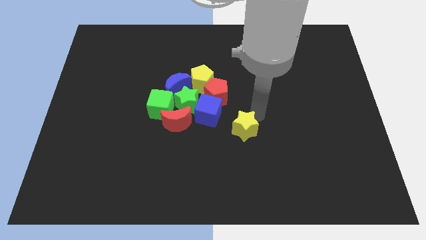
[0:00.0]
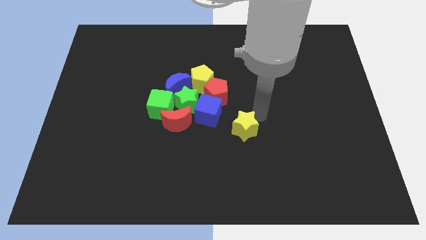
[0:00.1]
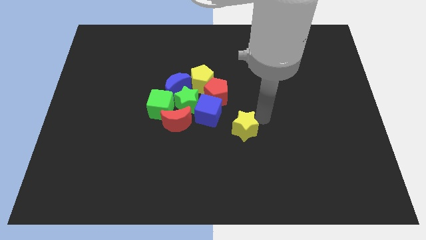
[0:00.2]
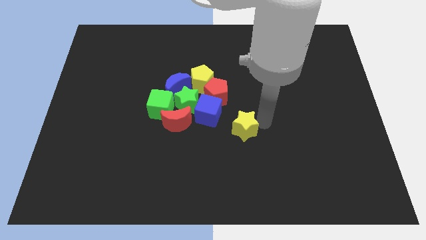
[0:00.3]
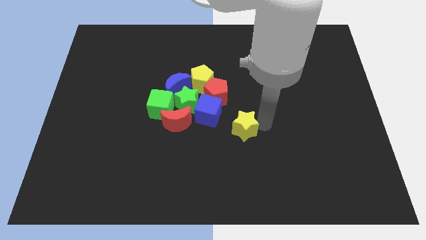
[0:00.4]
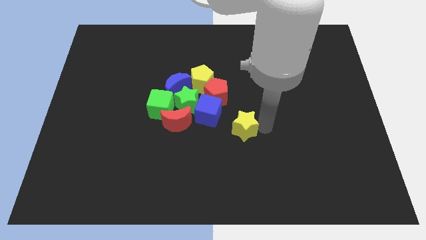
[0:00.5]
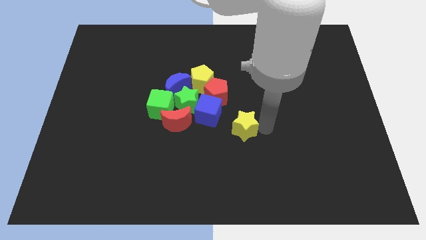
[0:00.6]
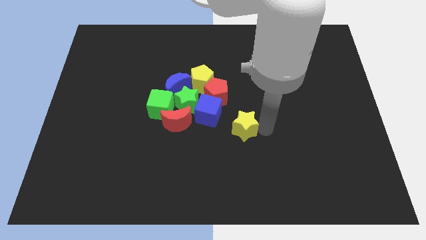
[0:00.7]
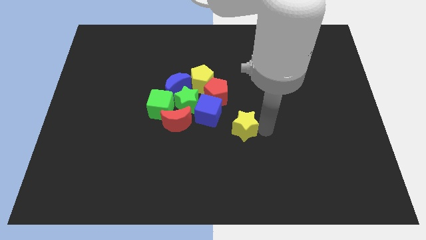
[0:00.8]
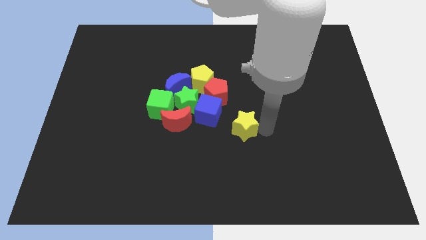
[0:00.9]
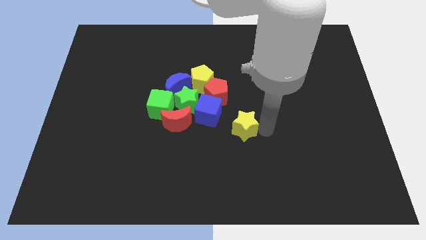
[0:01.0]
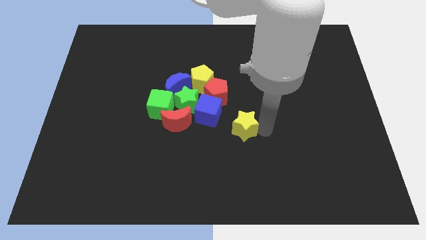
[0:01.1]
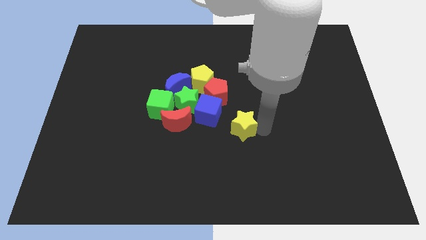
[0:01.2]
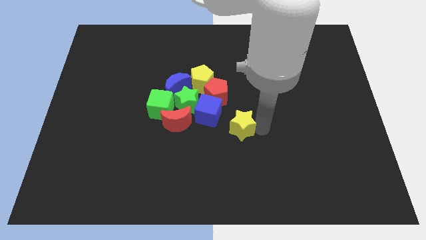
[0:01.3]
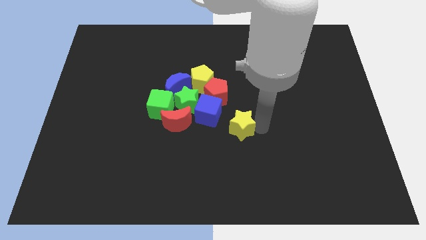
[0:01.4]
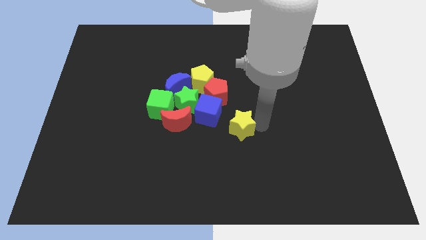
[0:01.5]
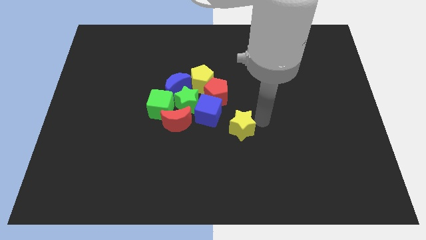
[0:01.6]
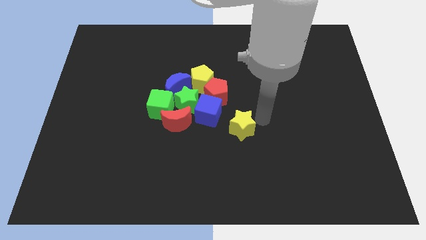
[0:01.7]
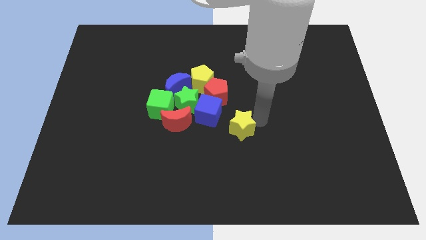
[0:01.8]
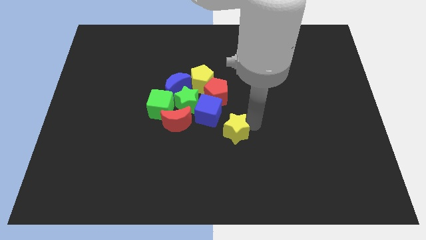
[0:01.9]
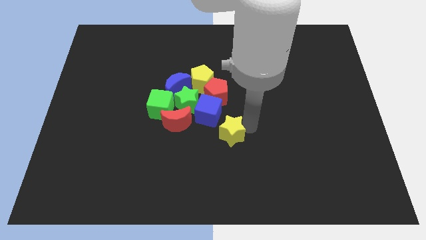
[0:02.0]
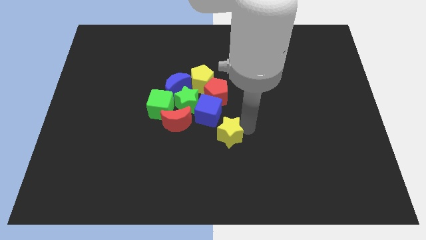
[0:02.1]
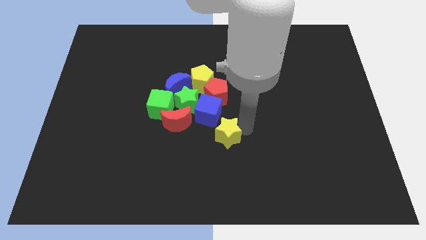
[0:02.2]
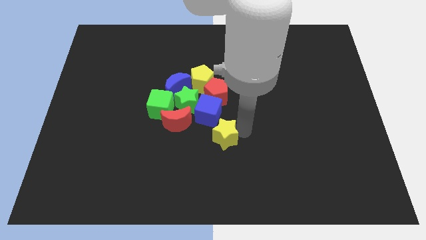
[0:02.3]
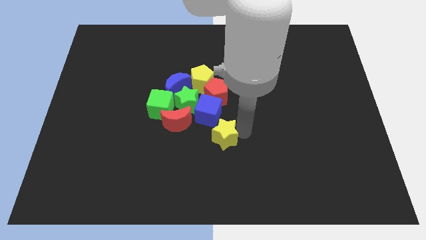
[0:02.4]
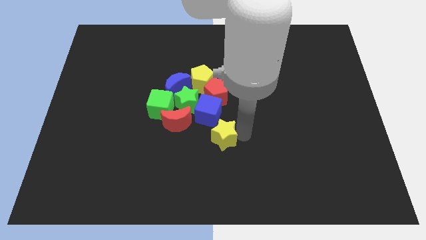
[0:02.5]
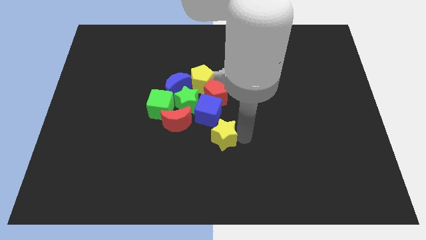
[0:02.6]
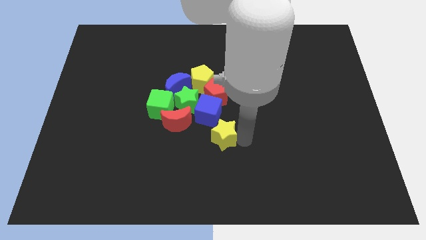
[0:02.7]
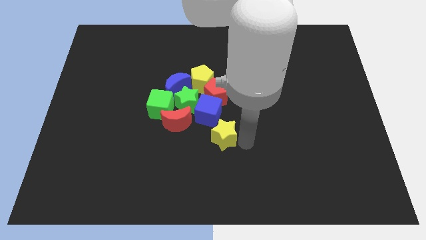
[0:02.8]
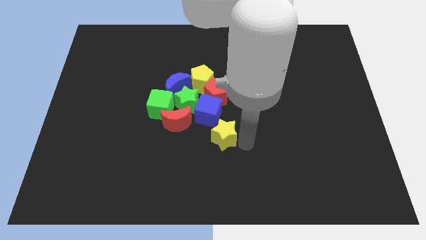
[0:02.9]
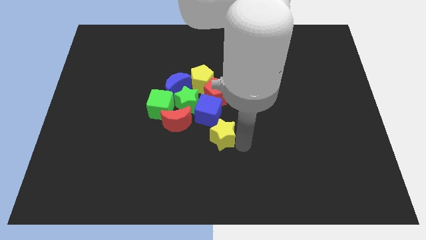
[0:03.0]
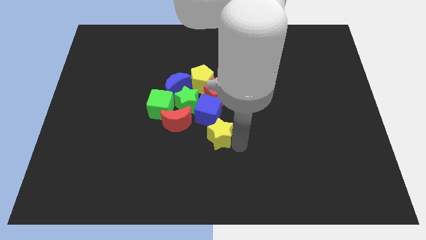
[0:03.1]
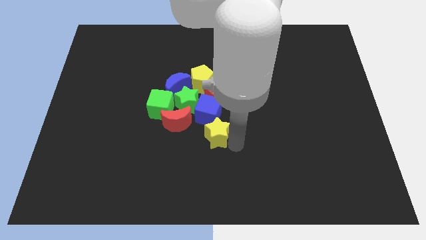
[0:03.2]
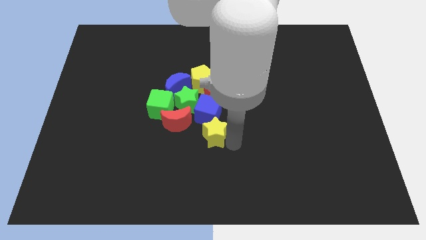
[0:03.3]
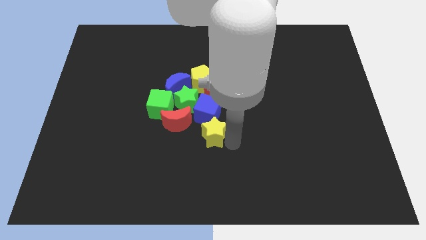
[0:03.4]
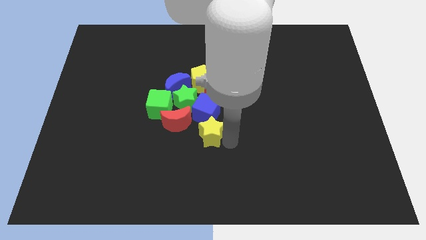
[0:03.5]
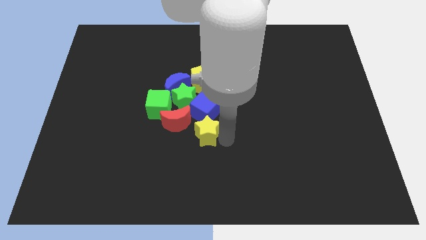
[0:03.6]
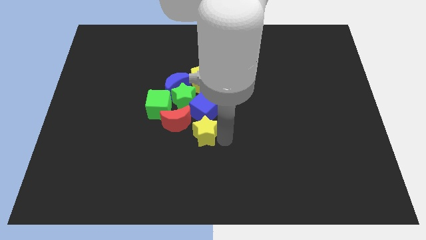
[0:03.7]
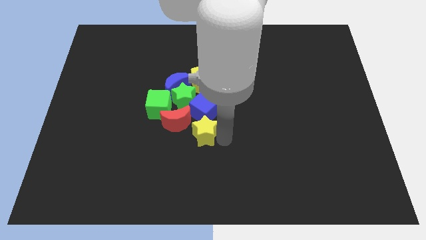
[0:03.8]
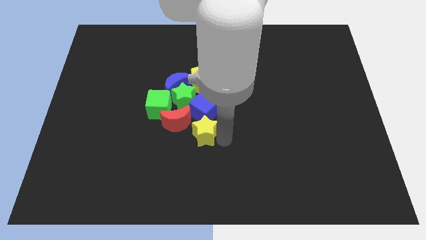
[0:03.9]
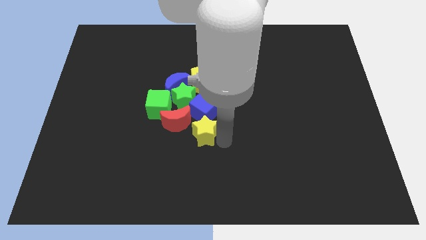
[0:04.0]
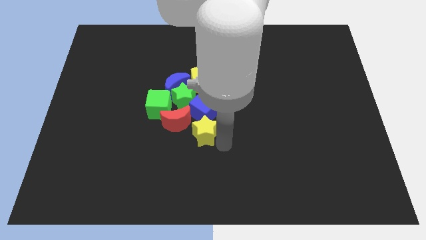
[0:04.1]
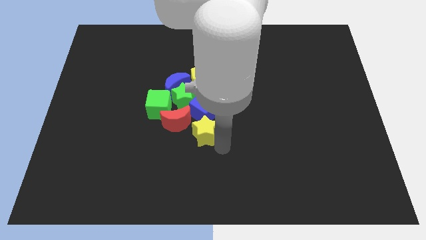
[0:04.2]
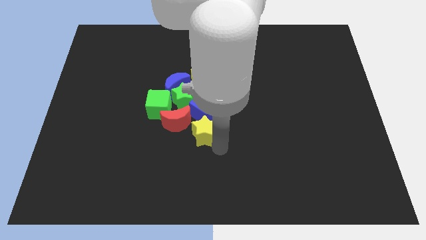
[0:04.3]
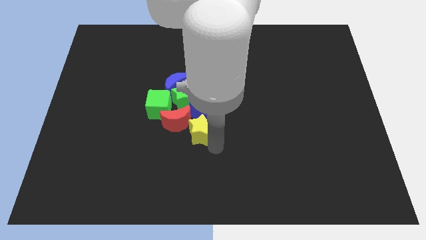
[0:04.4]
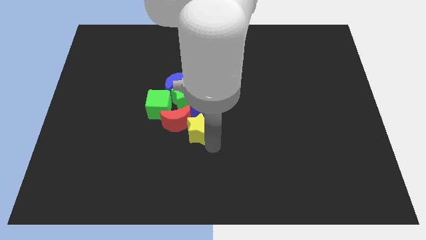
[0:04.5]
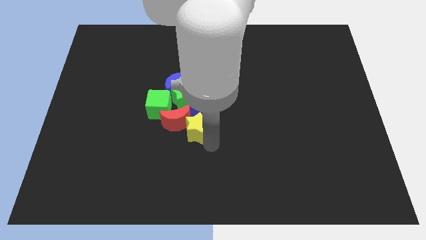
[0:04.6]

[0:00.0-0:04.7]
move the yellow star into the group of blocks

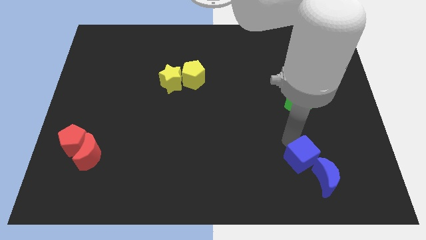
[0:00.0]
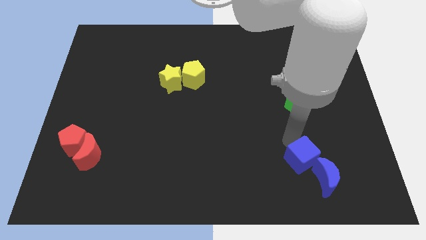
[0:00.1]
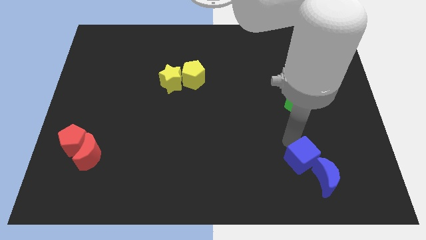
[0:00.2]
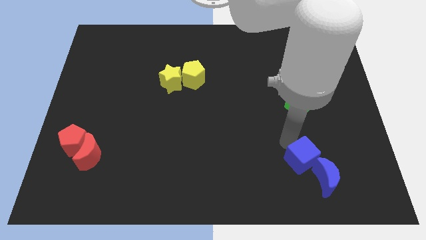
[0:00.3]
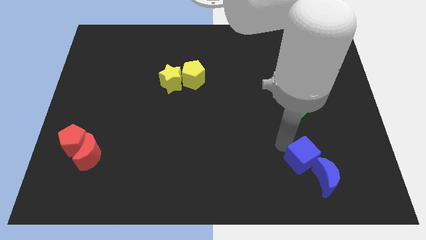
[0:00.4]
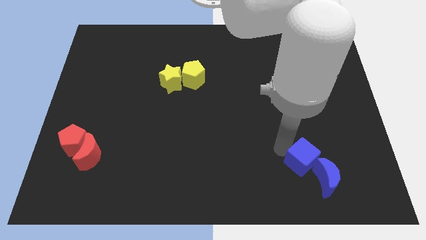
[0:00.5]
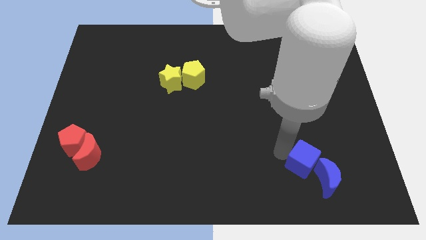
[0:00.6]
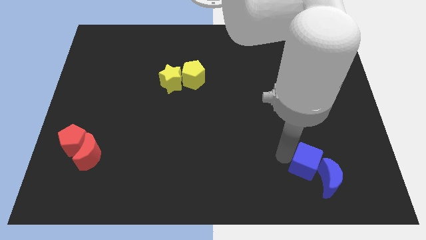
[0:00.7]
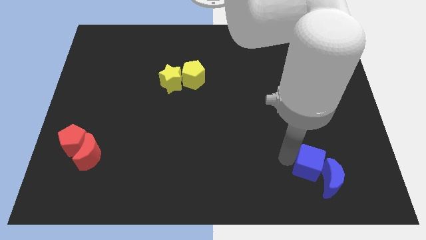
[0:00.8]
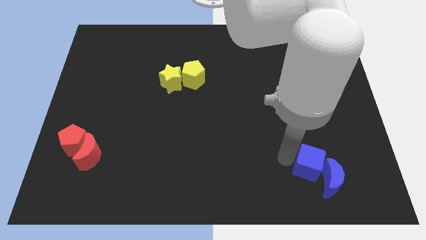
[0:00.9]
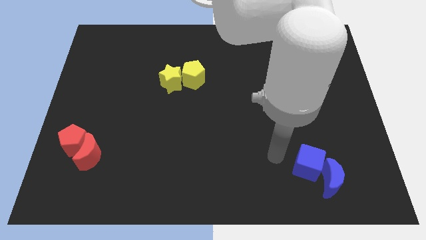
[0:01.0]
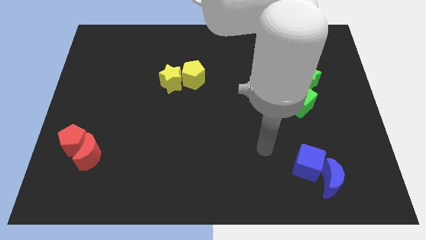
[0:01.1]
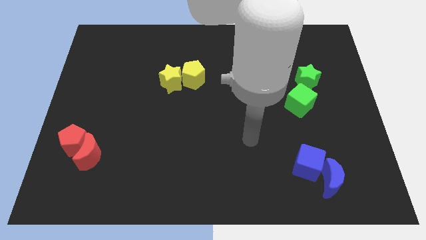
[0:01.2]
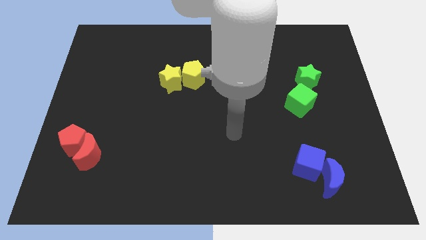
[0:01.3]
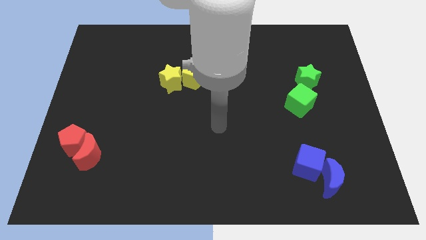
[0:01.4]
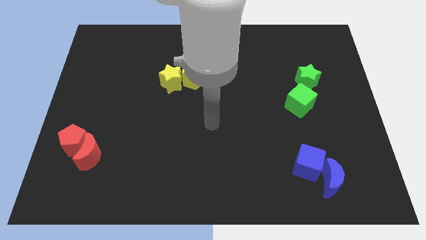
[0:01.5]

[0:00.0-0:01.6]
move your arm away from the blue cube

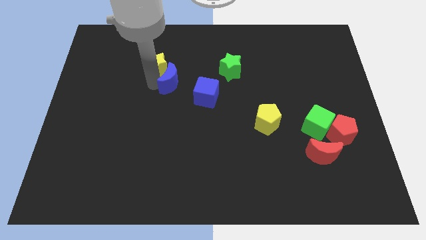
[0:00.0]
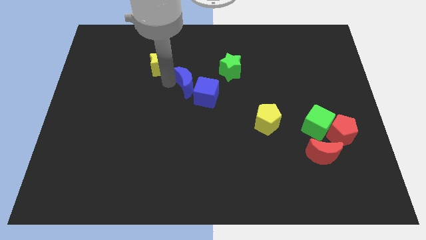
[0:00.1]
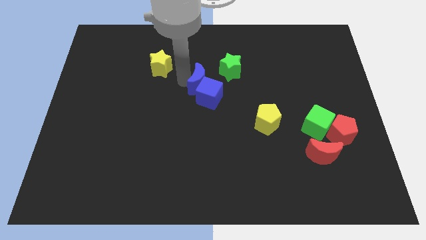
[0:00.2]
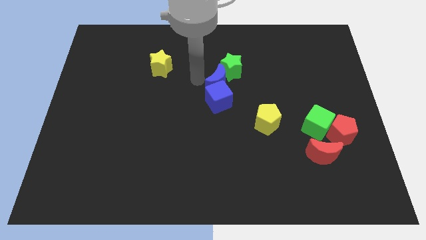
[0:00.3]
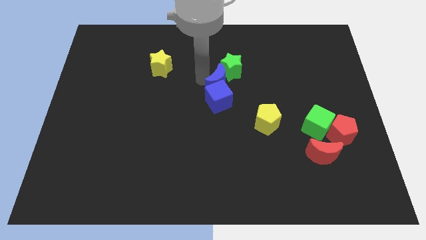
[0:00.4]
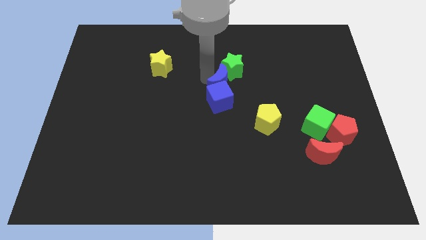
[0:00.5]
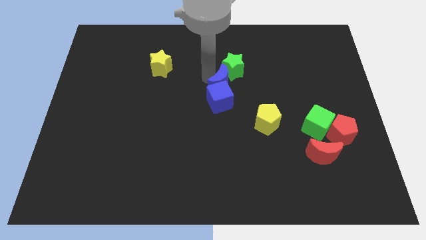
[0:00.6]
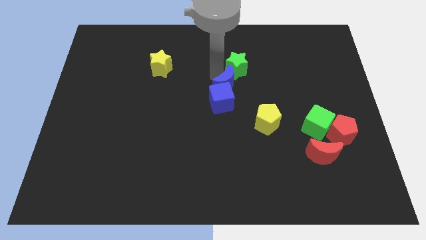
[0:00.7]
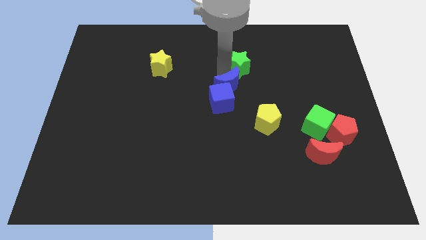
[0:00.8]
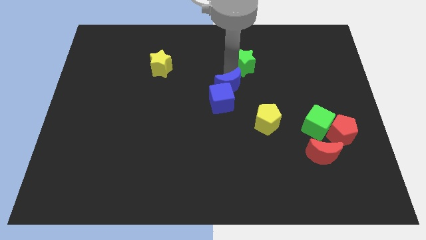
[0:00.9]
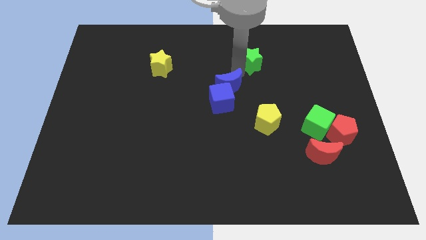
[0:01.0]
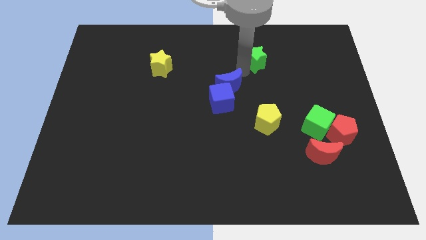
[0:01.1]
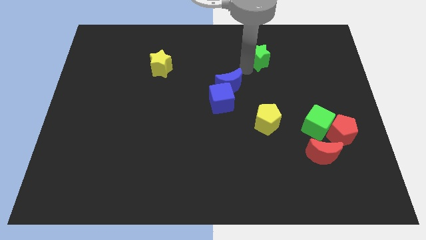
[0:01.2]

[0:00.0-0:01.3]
push the blue cube and green star with the blue moon

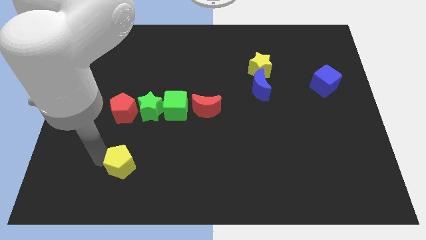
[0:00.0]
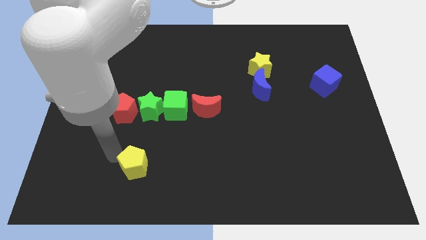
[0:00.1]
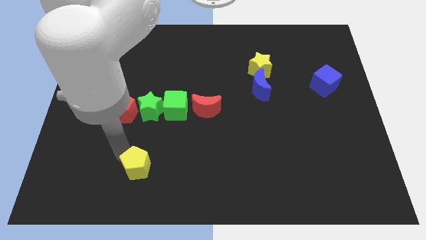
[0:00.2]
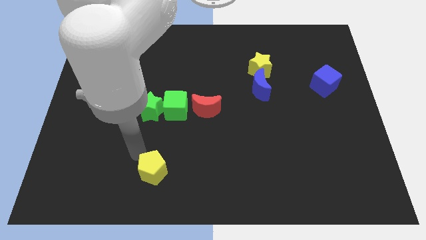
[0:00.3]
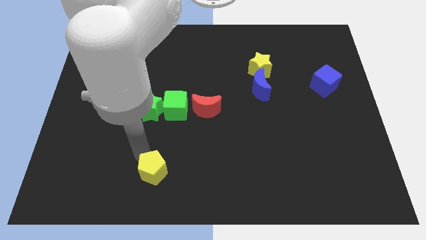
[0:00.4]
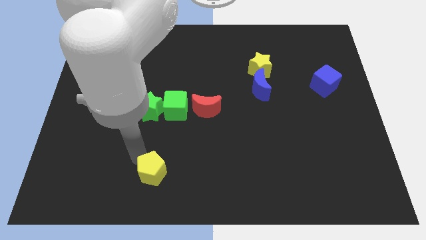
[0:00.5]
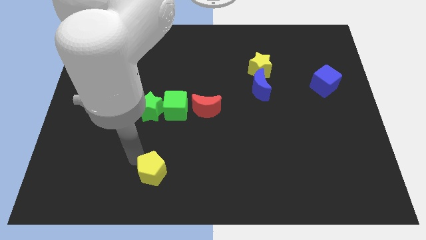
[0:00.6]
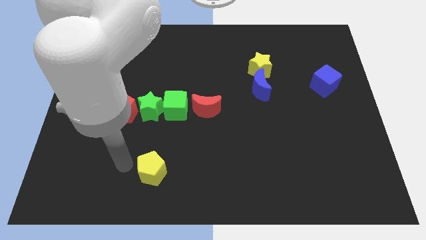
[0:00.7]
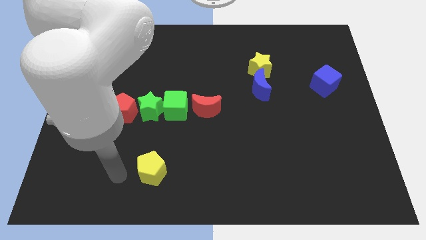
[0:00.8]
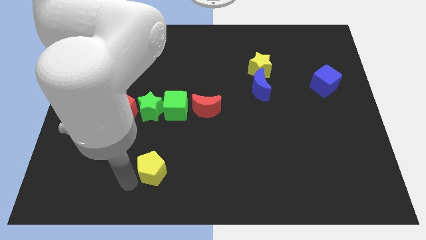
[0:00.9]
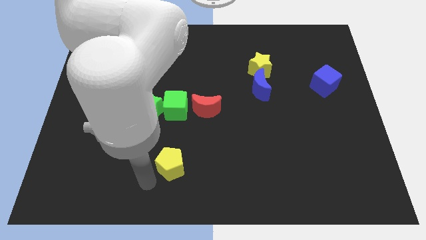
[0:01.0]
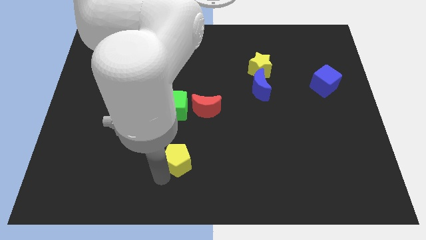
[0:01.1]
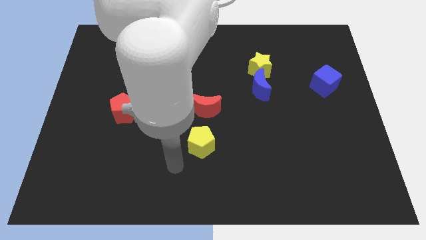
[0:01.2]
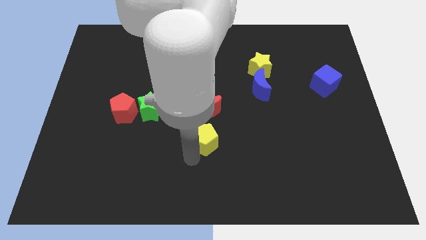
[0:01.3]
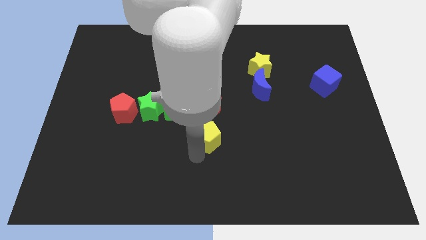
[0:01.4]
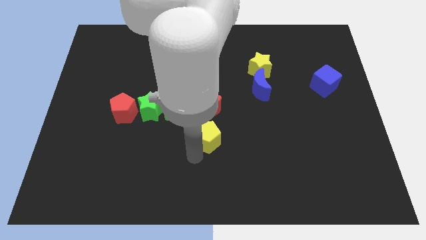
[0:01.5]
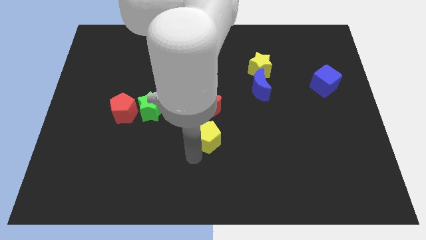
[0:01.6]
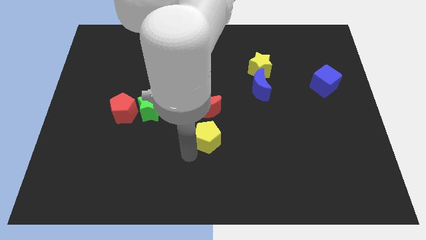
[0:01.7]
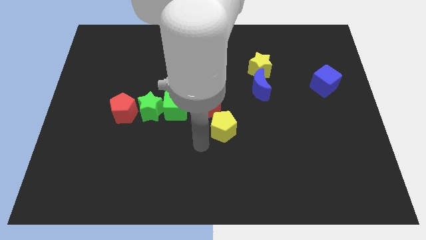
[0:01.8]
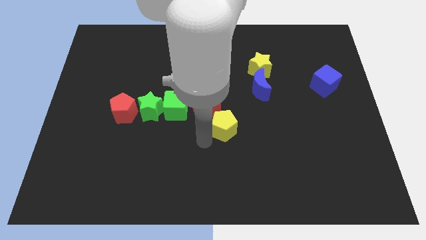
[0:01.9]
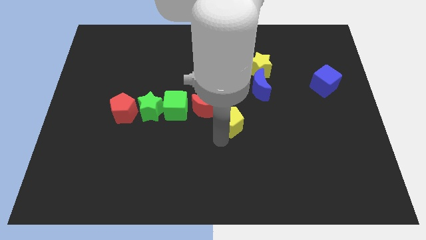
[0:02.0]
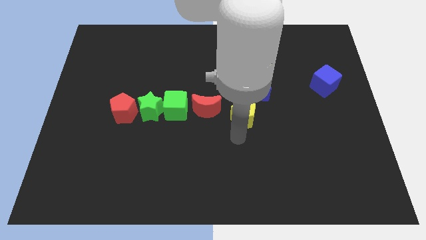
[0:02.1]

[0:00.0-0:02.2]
move the yellow pentagon close to the red crescent
